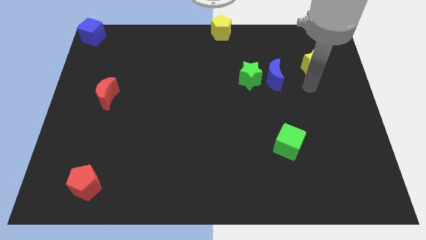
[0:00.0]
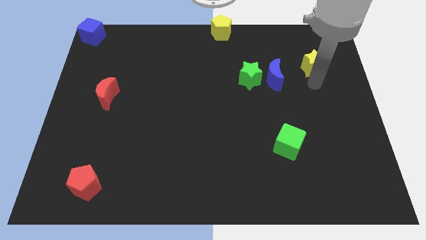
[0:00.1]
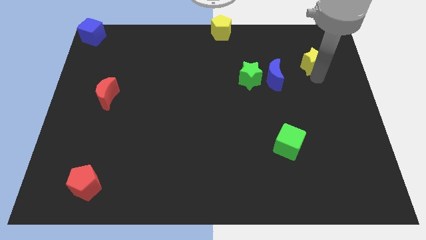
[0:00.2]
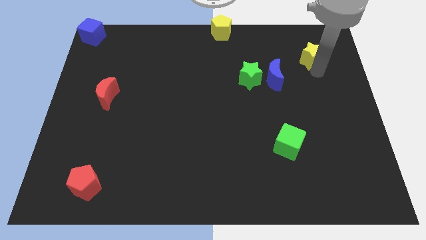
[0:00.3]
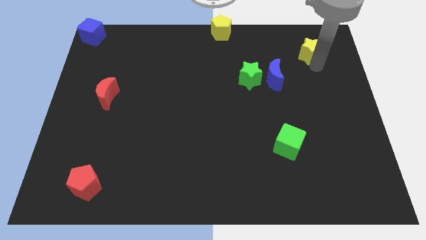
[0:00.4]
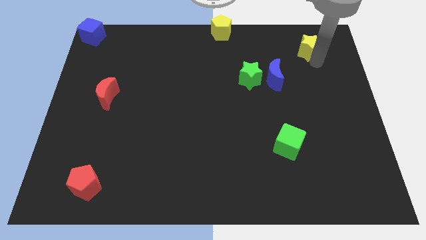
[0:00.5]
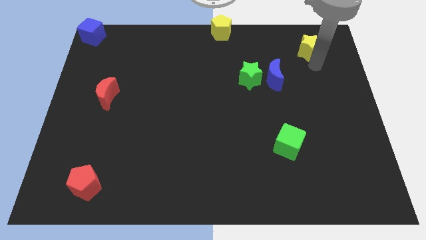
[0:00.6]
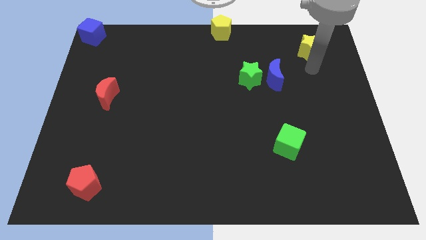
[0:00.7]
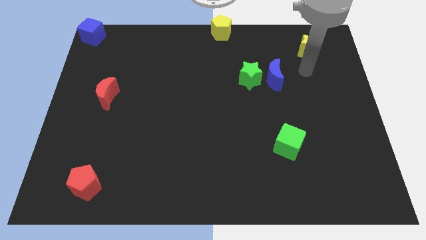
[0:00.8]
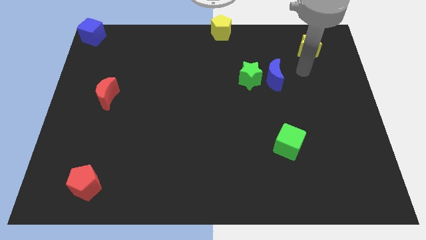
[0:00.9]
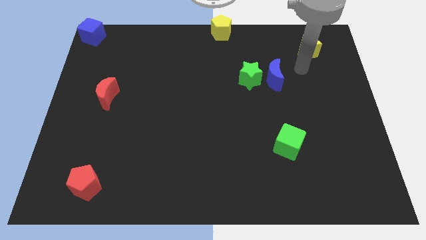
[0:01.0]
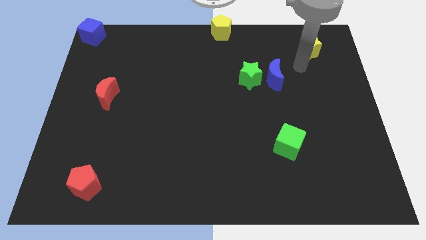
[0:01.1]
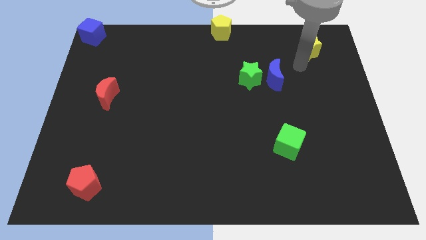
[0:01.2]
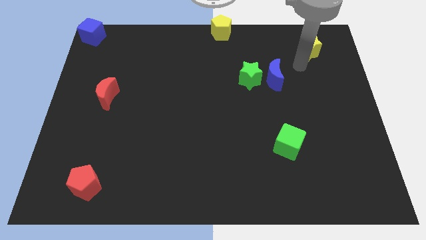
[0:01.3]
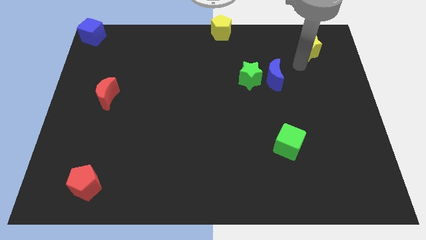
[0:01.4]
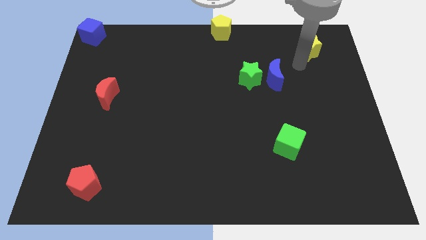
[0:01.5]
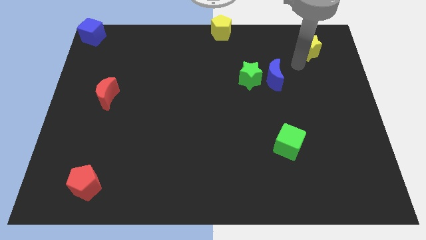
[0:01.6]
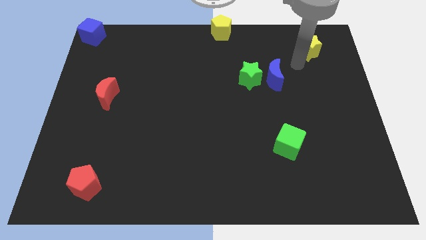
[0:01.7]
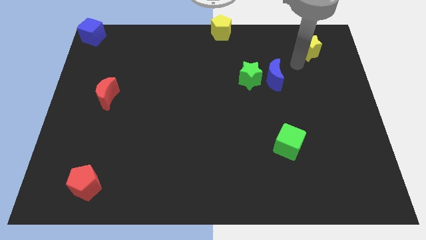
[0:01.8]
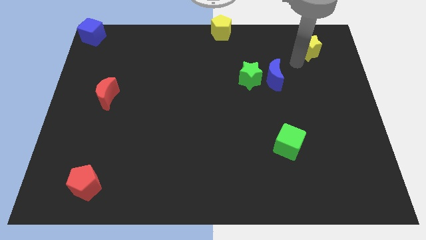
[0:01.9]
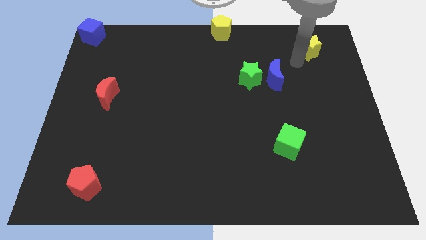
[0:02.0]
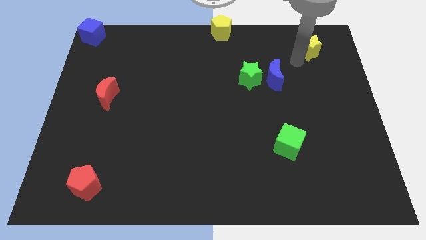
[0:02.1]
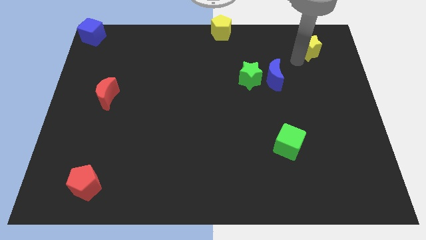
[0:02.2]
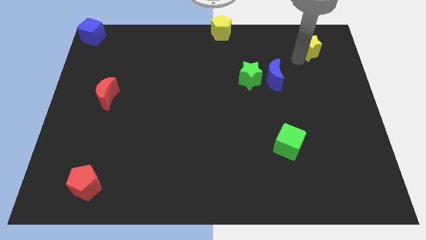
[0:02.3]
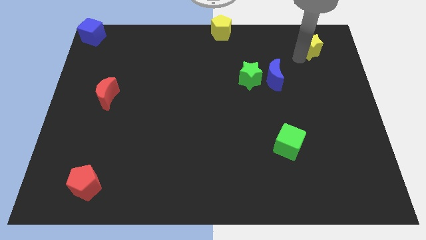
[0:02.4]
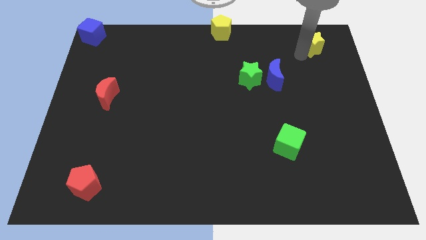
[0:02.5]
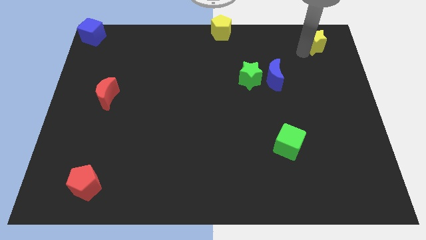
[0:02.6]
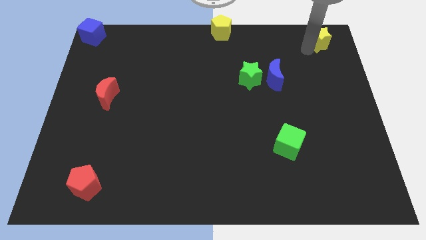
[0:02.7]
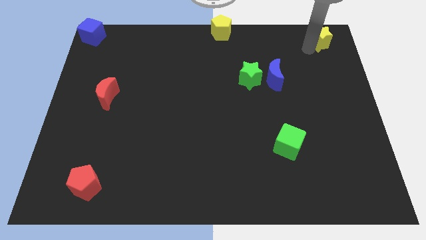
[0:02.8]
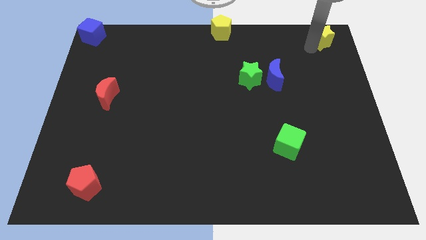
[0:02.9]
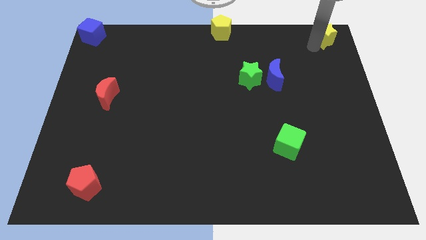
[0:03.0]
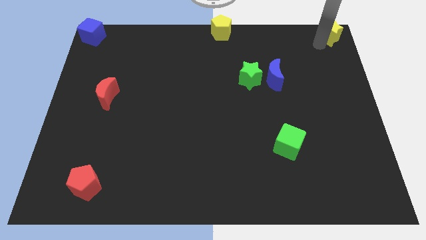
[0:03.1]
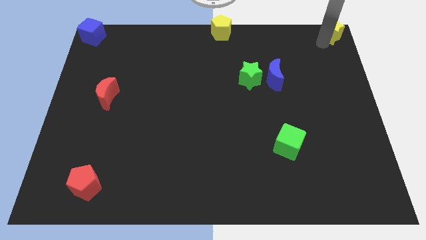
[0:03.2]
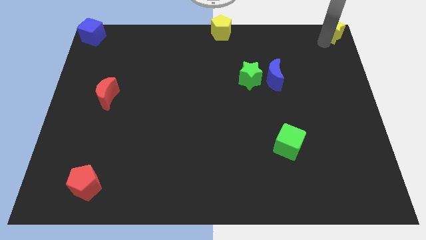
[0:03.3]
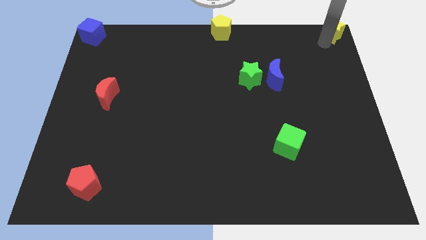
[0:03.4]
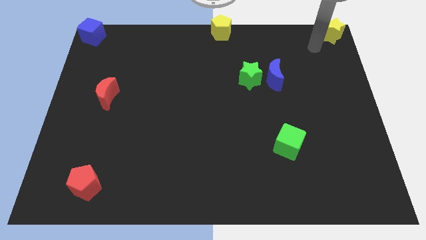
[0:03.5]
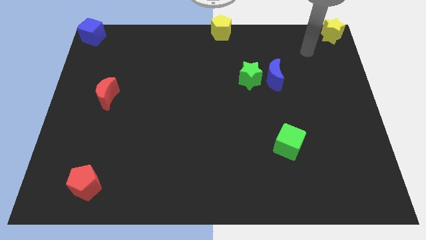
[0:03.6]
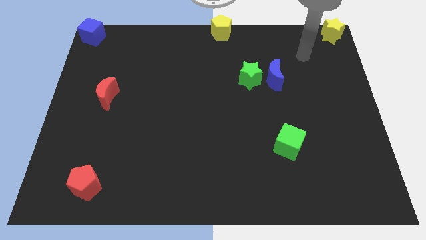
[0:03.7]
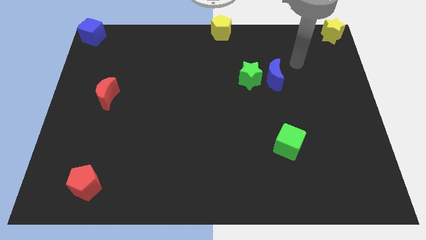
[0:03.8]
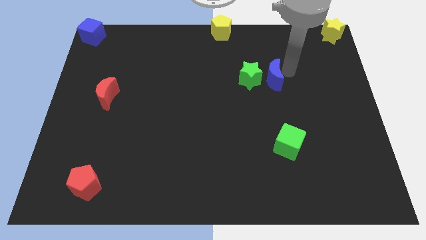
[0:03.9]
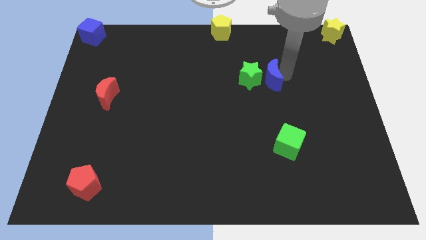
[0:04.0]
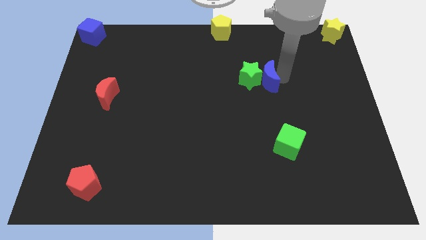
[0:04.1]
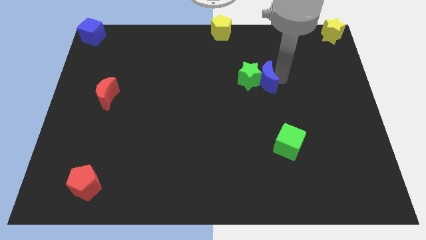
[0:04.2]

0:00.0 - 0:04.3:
slide the yellow star at the top right corner of the board

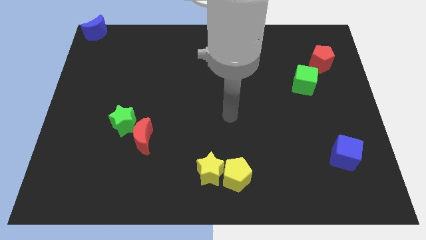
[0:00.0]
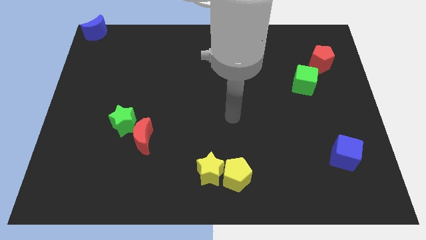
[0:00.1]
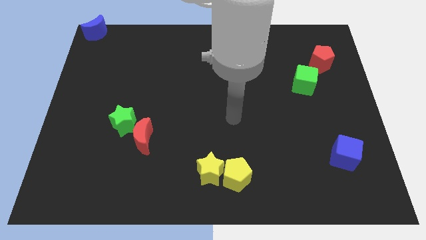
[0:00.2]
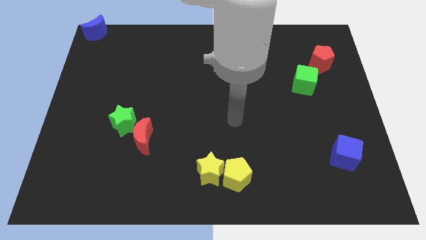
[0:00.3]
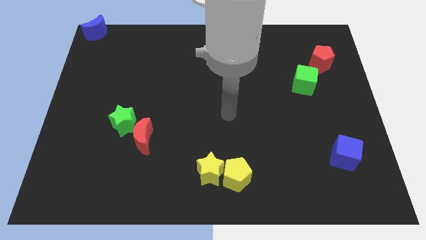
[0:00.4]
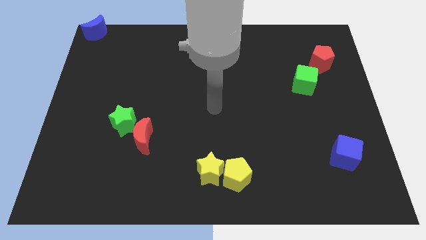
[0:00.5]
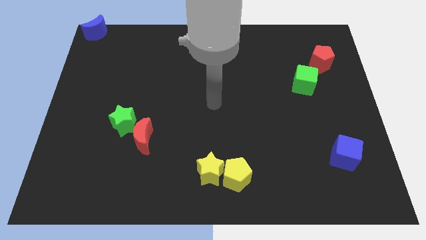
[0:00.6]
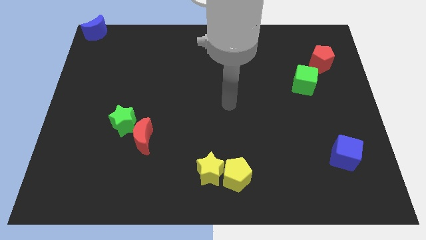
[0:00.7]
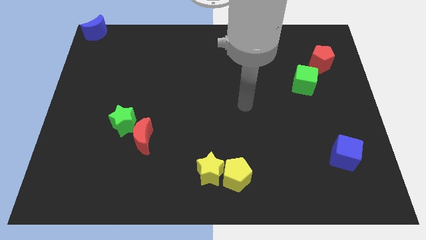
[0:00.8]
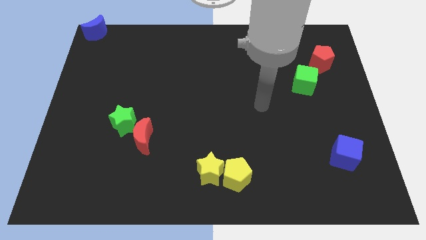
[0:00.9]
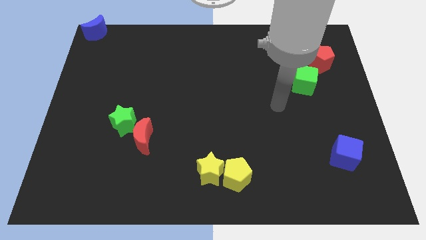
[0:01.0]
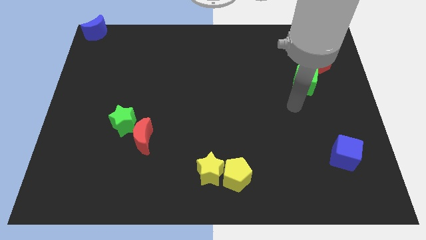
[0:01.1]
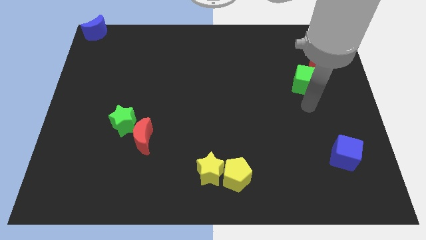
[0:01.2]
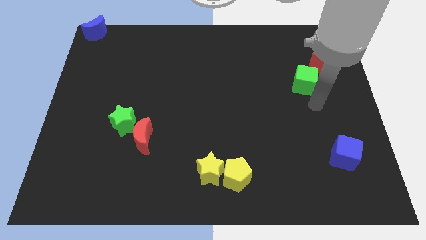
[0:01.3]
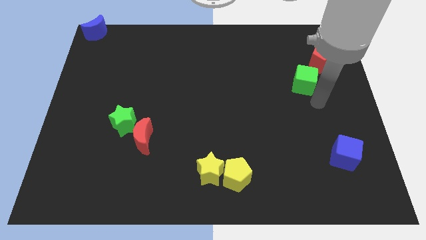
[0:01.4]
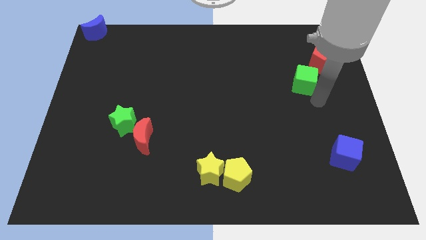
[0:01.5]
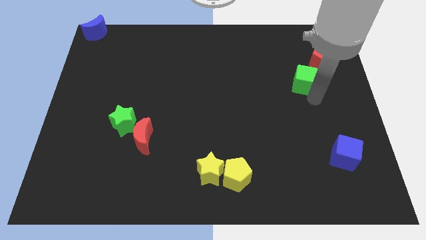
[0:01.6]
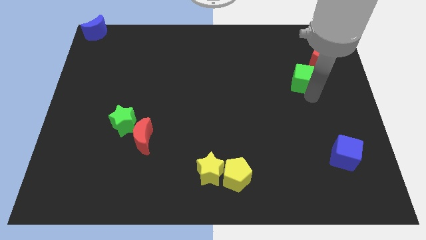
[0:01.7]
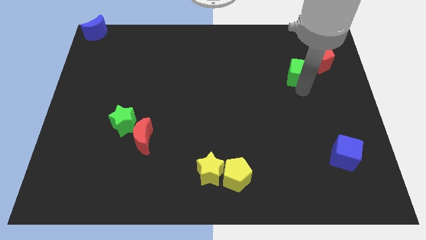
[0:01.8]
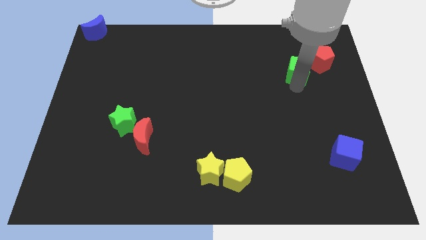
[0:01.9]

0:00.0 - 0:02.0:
move the green cube slightly up

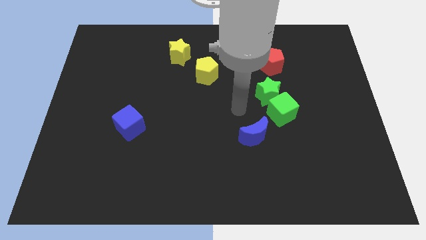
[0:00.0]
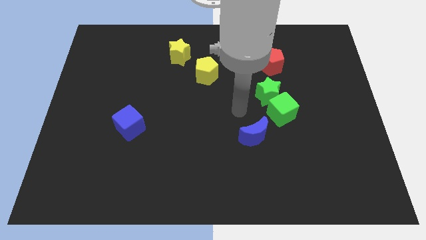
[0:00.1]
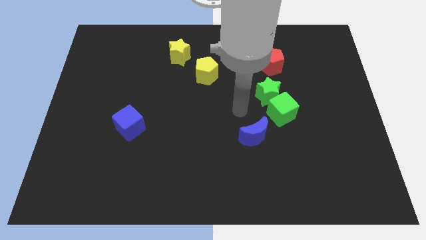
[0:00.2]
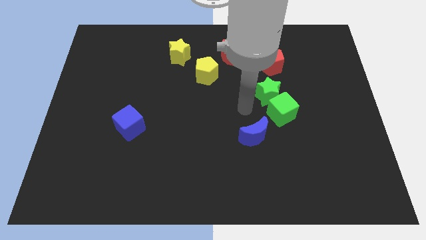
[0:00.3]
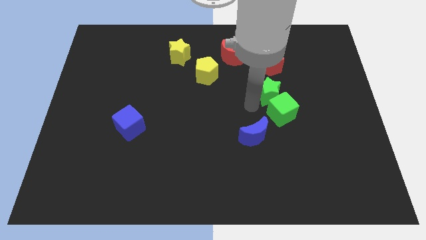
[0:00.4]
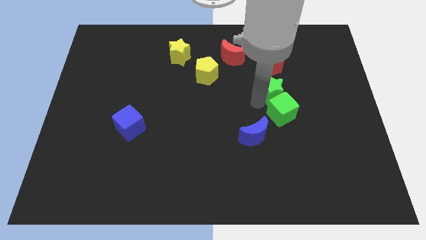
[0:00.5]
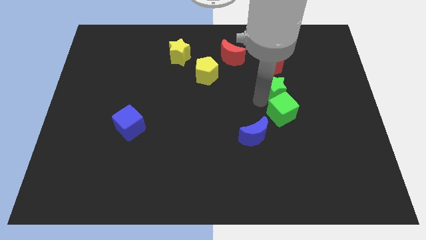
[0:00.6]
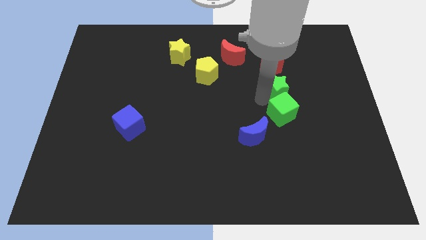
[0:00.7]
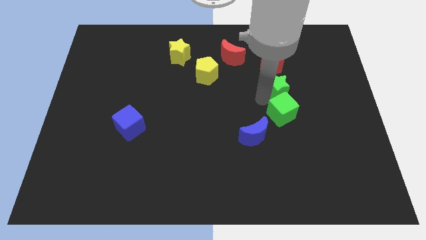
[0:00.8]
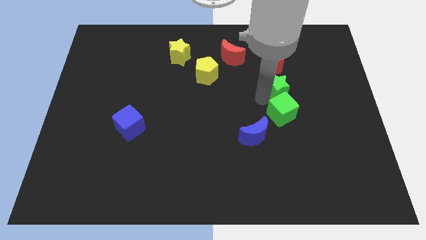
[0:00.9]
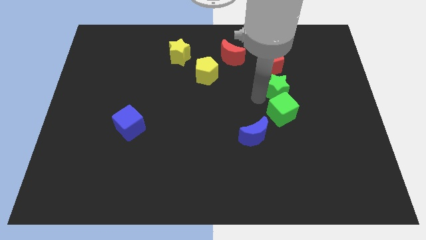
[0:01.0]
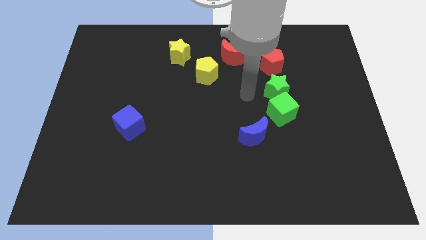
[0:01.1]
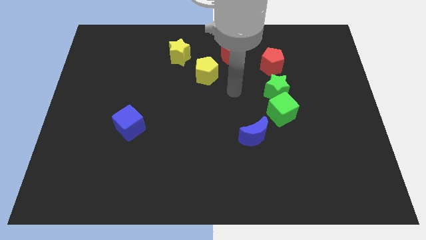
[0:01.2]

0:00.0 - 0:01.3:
push the green star to the right side slightly

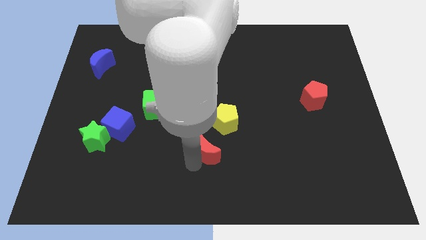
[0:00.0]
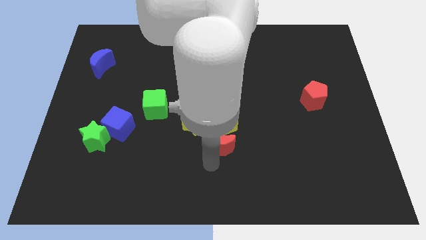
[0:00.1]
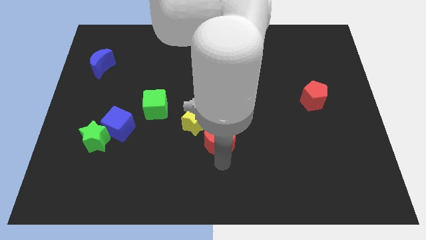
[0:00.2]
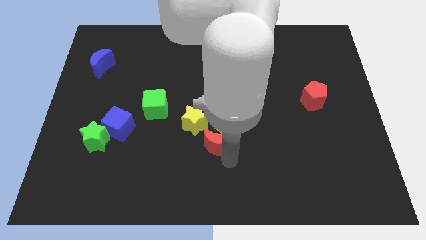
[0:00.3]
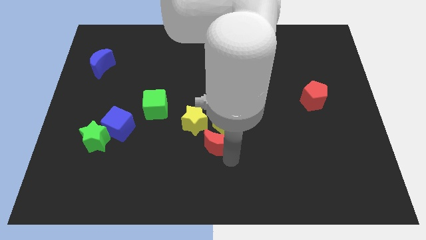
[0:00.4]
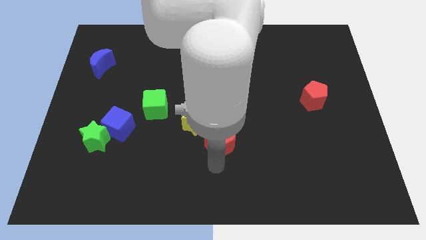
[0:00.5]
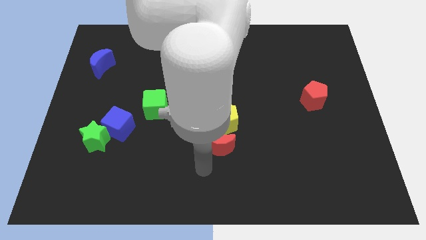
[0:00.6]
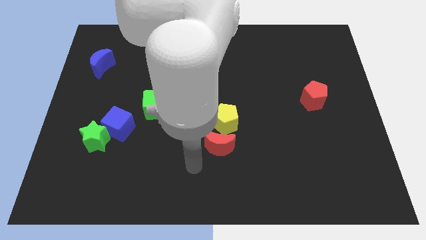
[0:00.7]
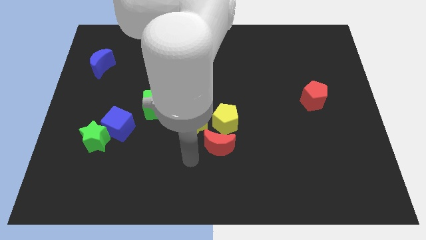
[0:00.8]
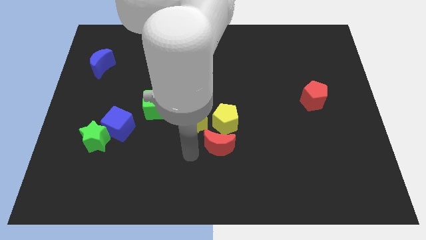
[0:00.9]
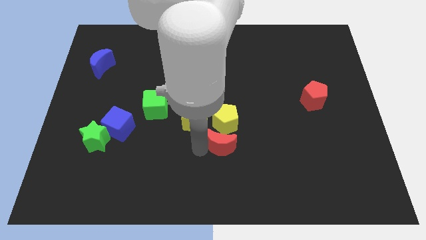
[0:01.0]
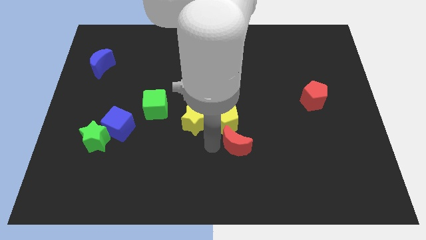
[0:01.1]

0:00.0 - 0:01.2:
push red crescent below yellow pentagon

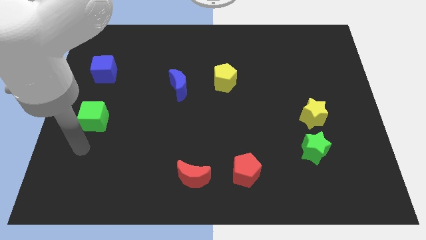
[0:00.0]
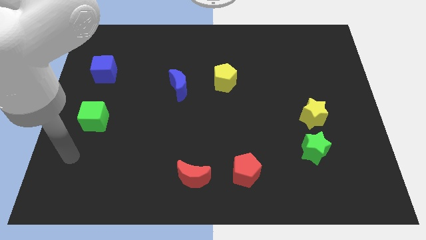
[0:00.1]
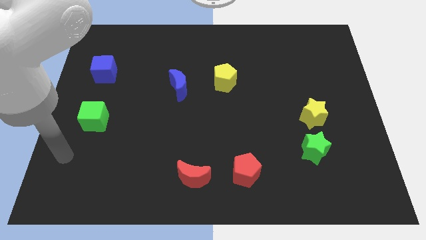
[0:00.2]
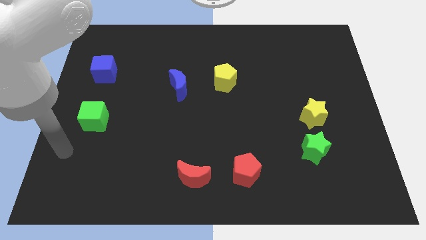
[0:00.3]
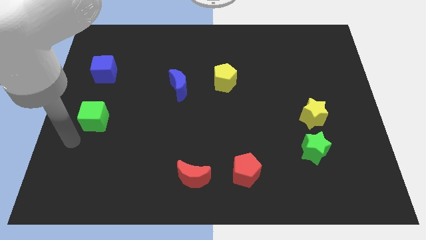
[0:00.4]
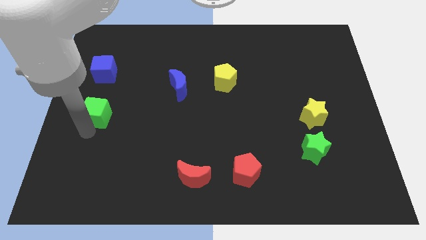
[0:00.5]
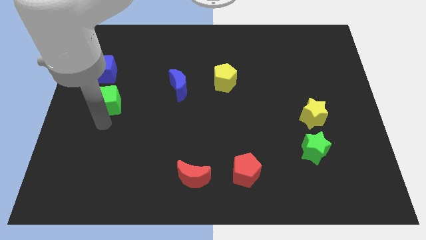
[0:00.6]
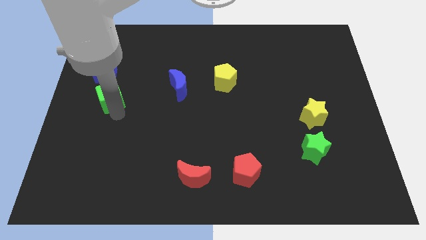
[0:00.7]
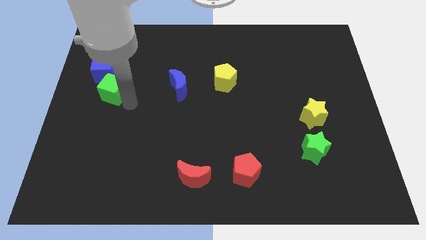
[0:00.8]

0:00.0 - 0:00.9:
move the green cube below the blue cube
